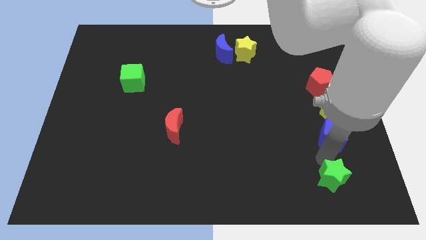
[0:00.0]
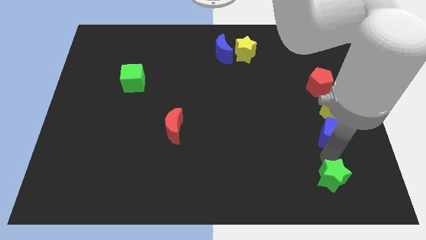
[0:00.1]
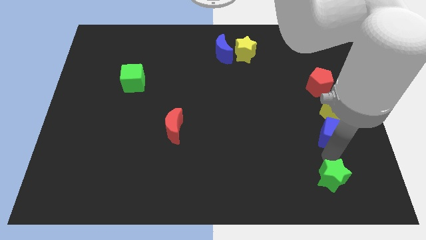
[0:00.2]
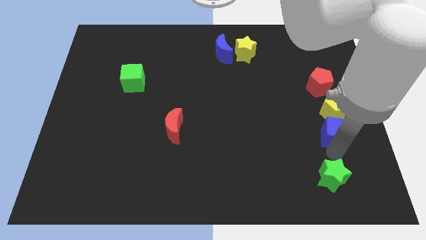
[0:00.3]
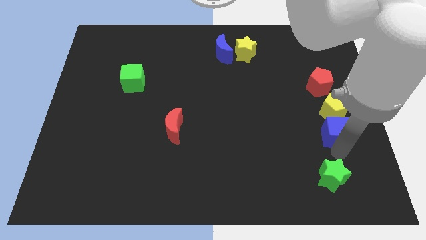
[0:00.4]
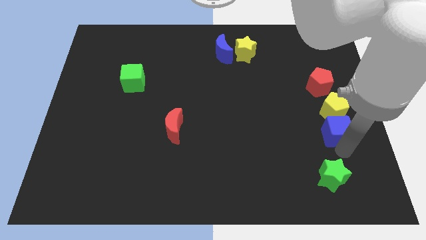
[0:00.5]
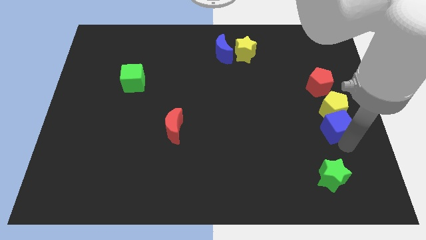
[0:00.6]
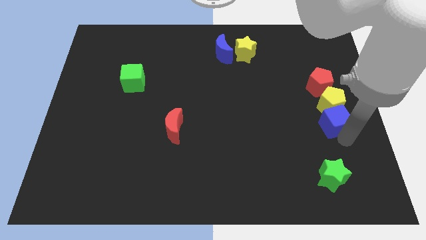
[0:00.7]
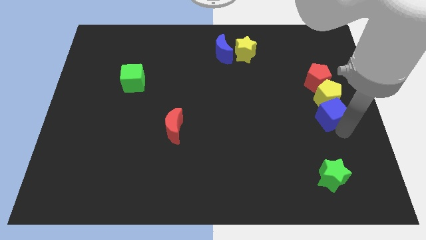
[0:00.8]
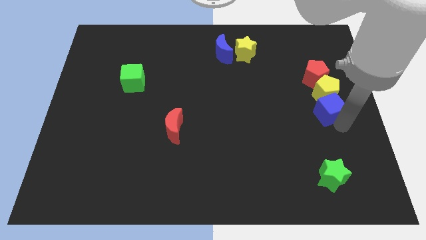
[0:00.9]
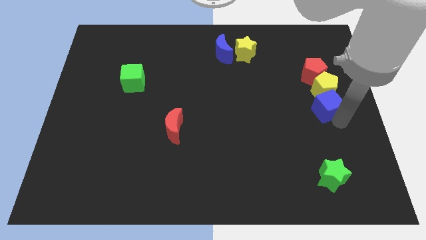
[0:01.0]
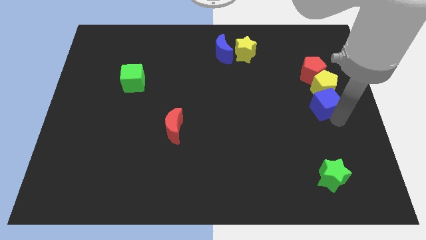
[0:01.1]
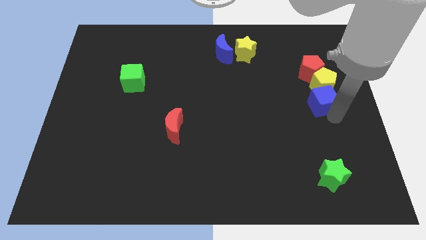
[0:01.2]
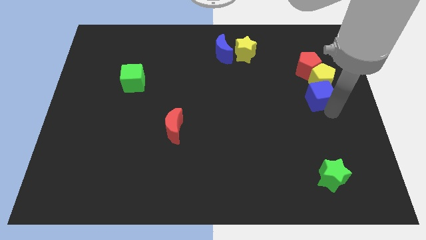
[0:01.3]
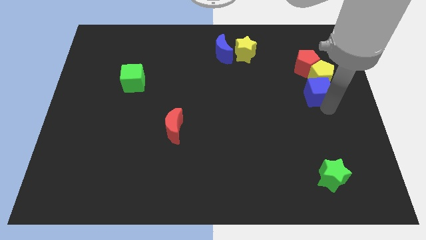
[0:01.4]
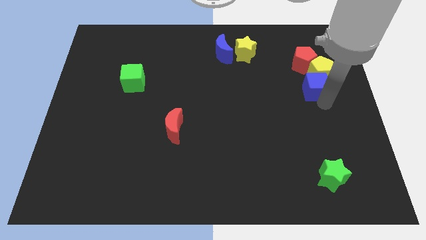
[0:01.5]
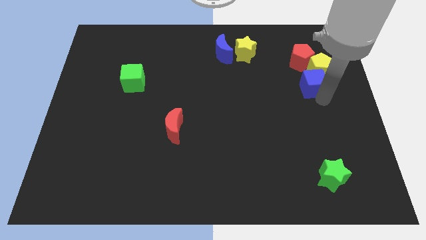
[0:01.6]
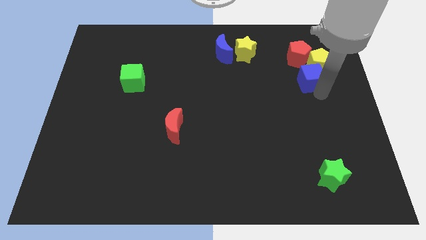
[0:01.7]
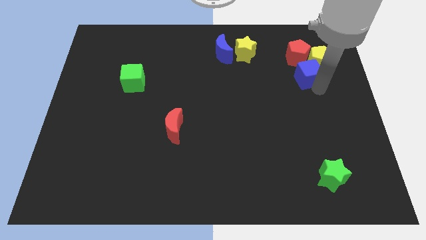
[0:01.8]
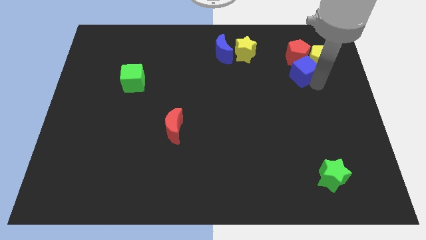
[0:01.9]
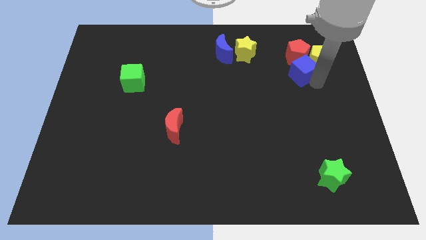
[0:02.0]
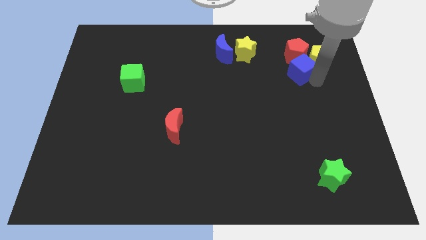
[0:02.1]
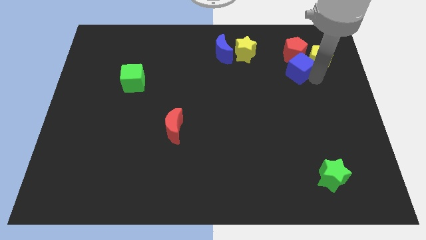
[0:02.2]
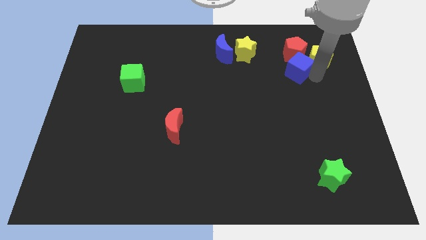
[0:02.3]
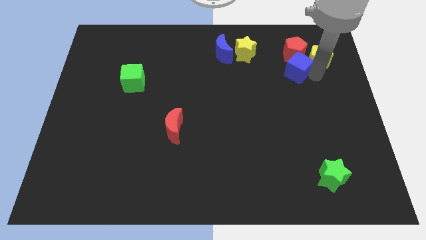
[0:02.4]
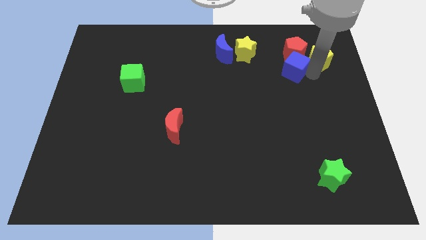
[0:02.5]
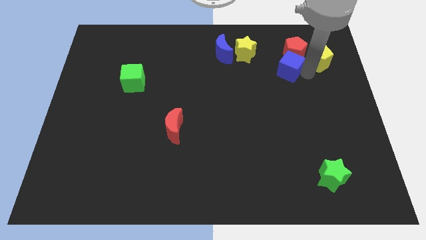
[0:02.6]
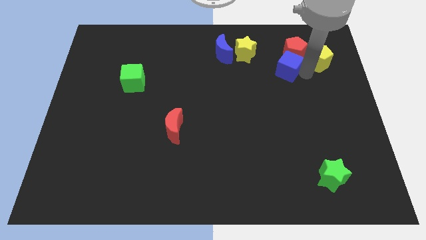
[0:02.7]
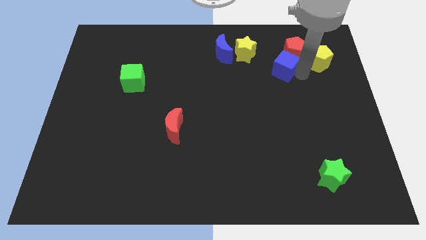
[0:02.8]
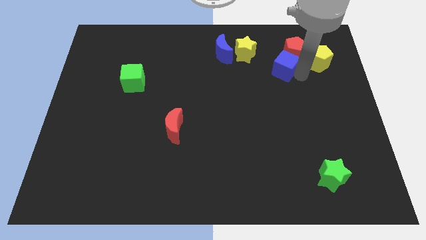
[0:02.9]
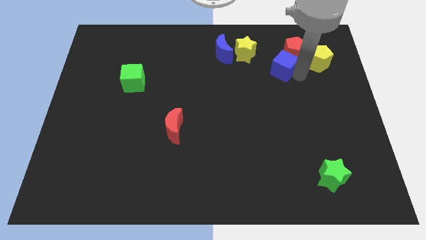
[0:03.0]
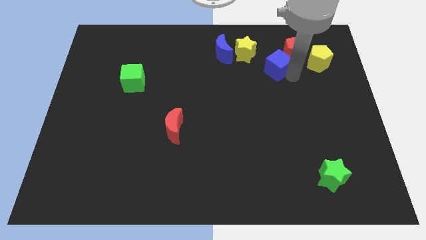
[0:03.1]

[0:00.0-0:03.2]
push the blue cube into the red pentagon and yellow pentagon

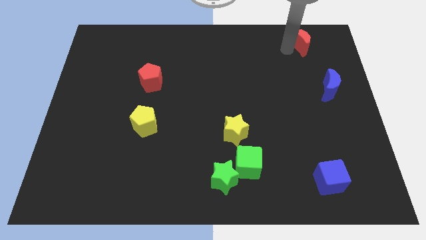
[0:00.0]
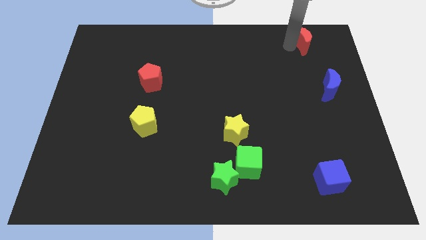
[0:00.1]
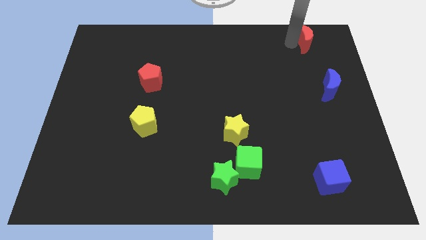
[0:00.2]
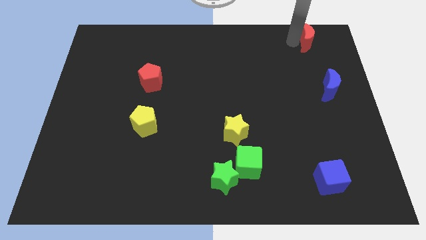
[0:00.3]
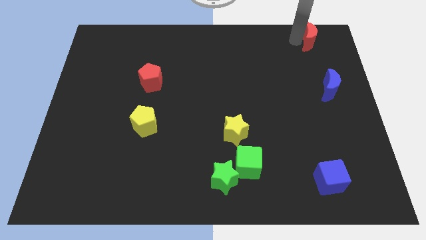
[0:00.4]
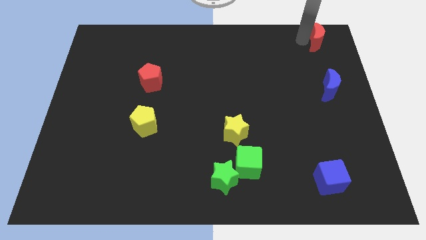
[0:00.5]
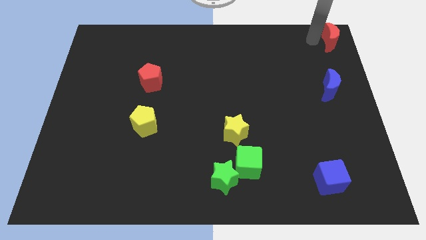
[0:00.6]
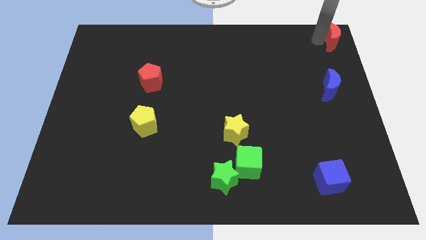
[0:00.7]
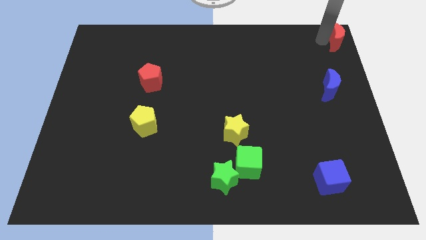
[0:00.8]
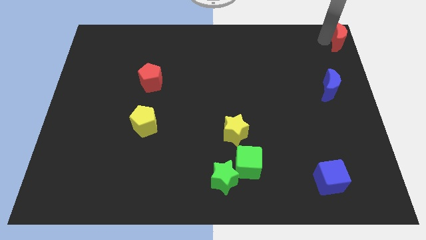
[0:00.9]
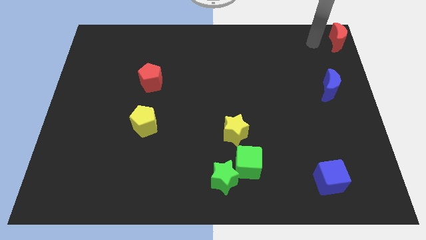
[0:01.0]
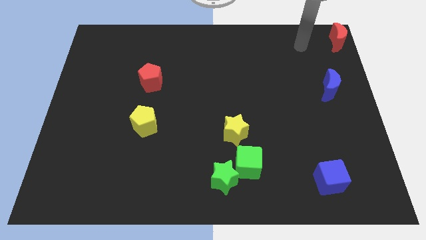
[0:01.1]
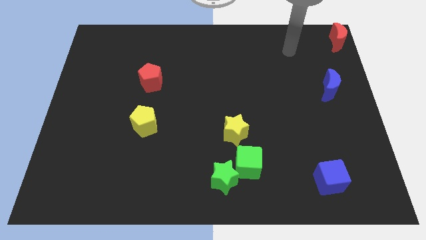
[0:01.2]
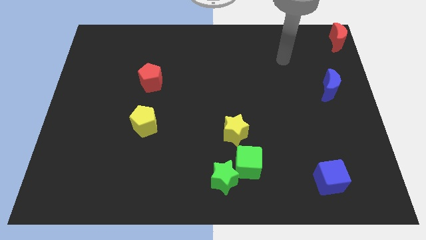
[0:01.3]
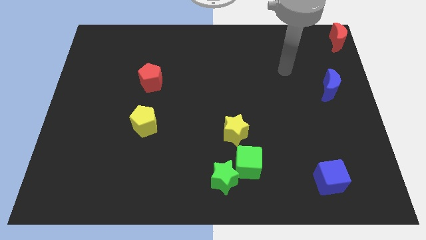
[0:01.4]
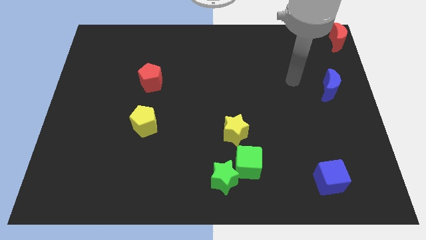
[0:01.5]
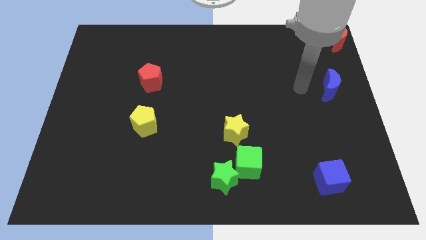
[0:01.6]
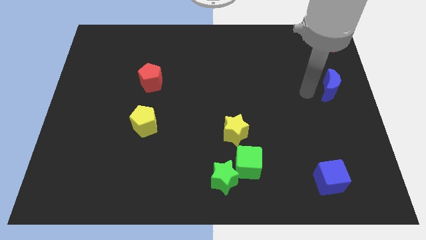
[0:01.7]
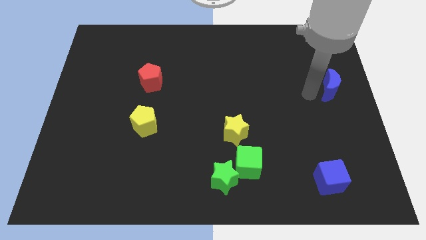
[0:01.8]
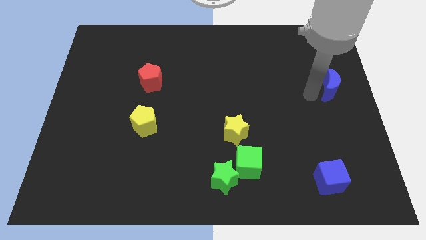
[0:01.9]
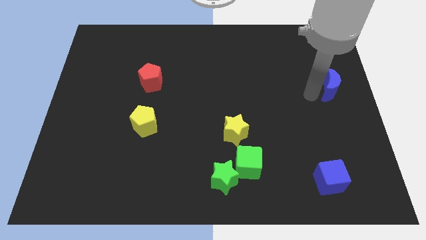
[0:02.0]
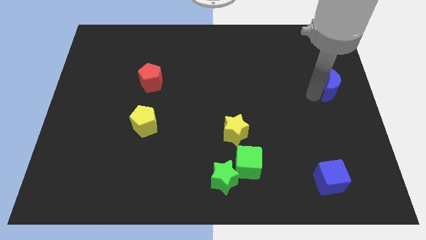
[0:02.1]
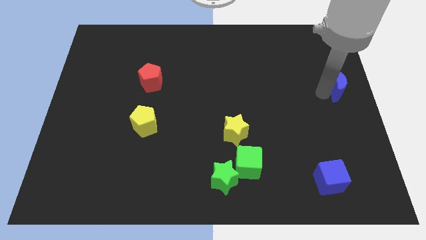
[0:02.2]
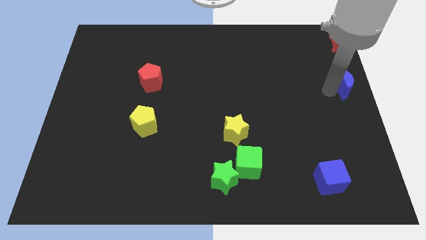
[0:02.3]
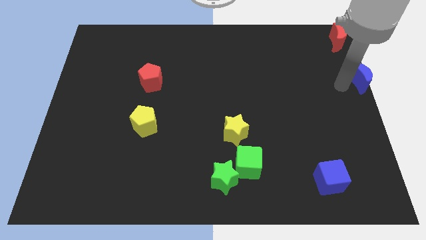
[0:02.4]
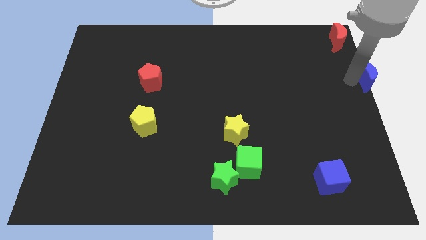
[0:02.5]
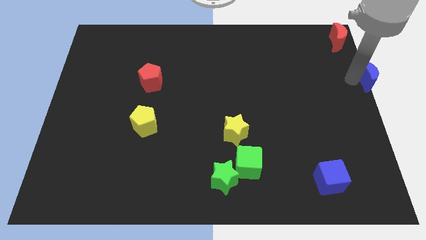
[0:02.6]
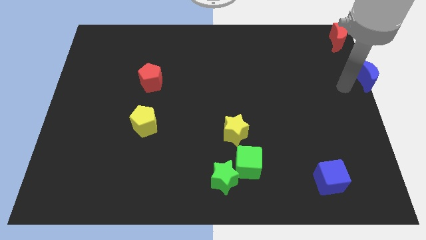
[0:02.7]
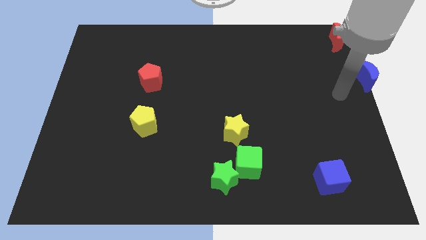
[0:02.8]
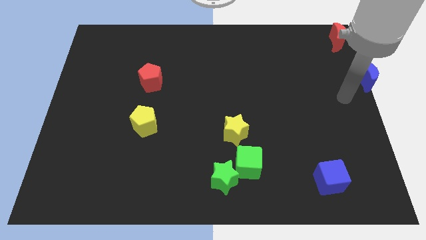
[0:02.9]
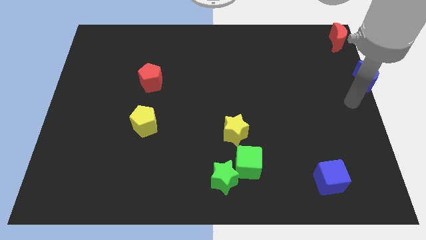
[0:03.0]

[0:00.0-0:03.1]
move red moon towards top right side of the board

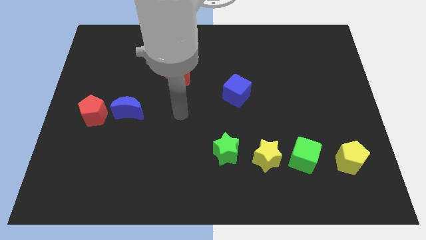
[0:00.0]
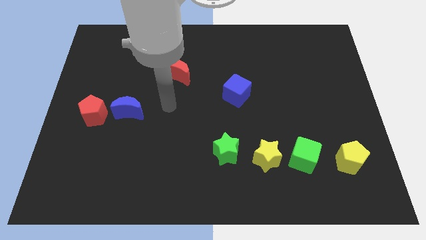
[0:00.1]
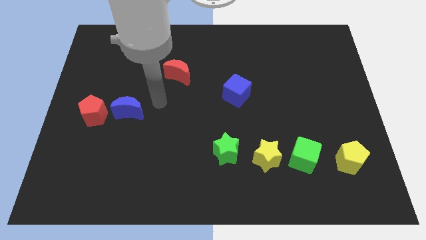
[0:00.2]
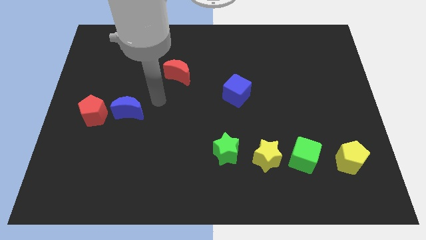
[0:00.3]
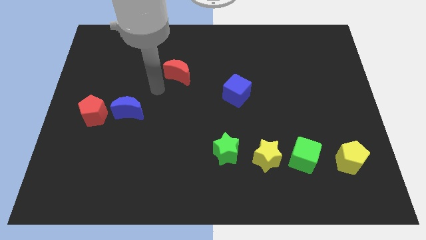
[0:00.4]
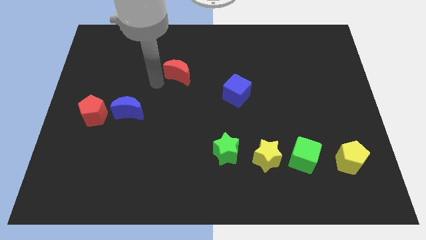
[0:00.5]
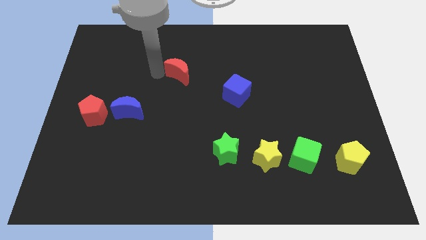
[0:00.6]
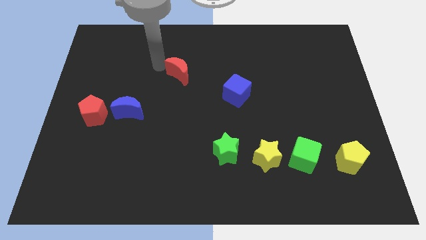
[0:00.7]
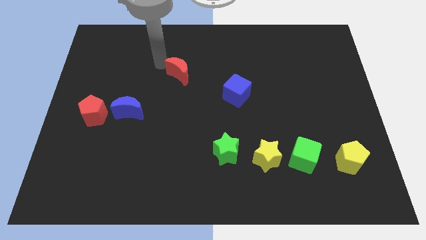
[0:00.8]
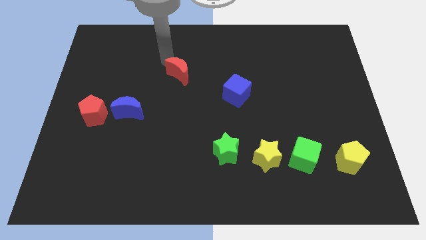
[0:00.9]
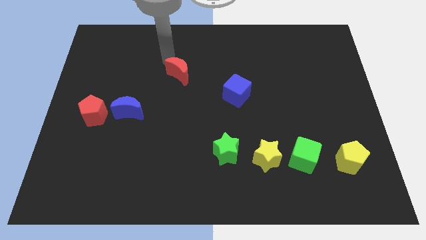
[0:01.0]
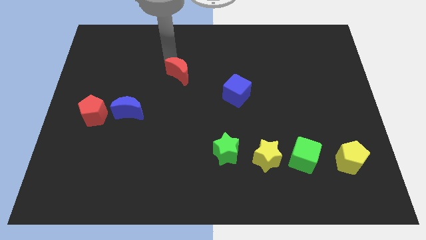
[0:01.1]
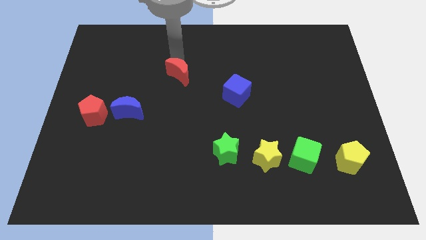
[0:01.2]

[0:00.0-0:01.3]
move the arm above to the red moon

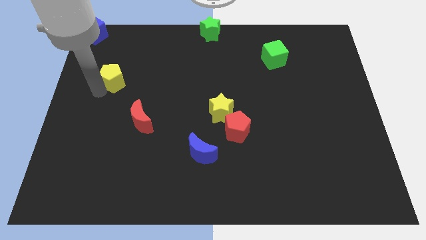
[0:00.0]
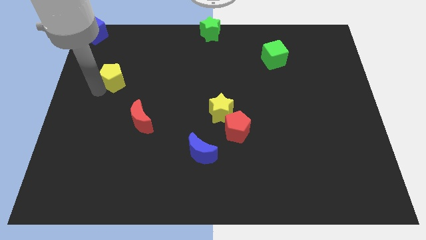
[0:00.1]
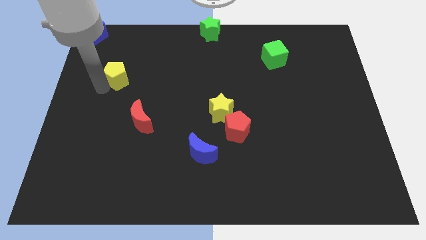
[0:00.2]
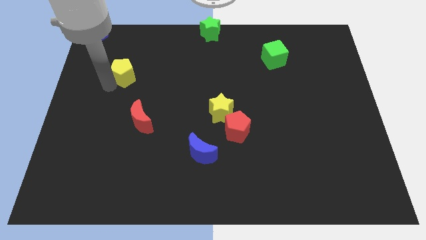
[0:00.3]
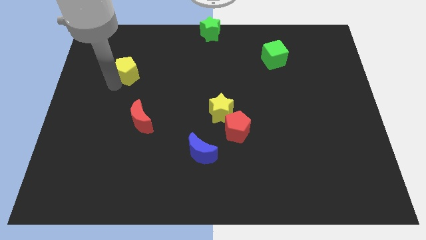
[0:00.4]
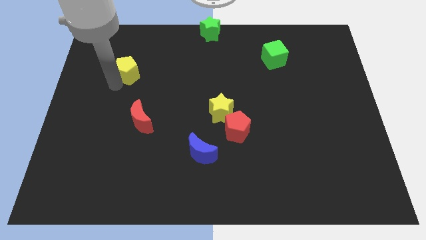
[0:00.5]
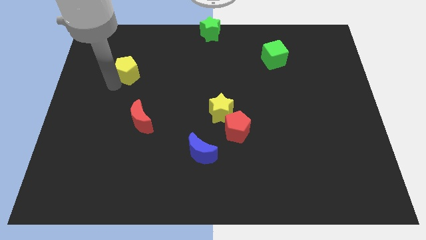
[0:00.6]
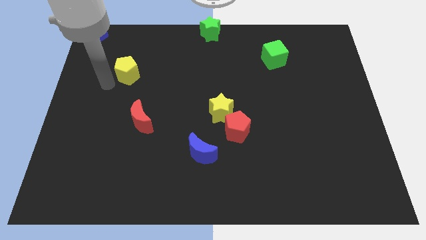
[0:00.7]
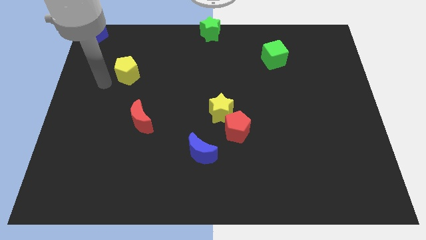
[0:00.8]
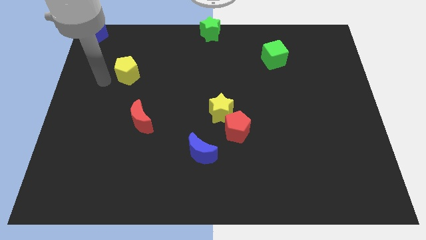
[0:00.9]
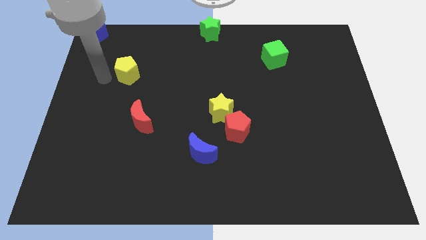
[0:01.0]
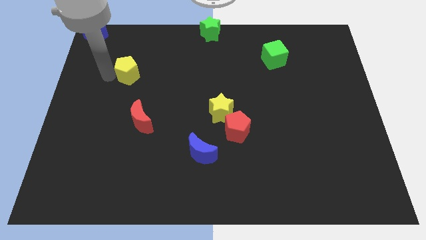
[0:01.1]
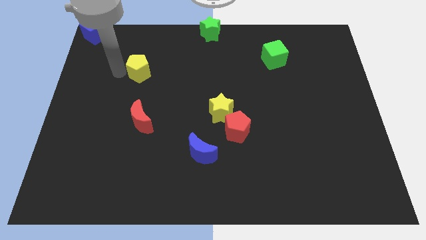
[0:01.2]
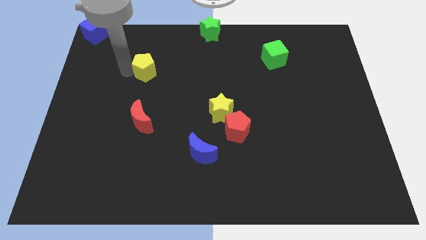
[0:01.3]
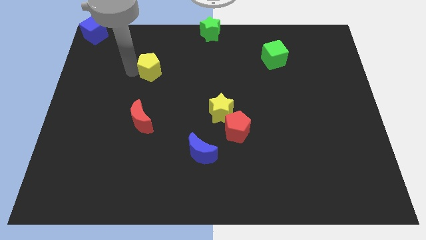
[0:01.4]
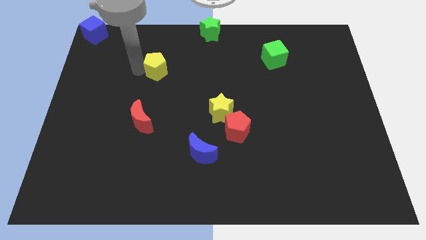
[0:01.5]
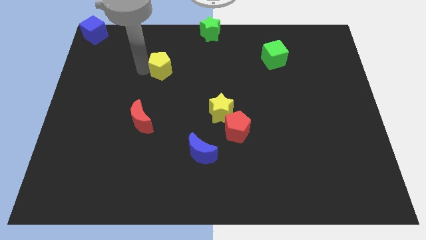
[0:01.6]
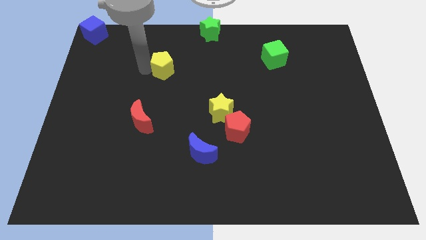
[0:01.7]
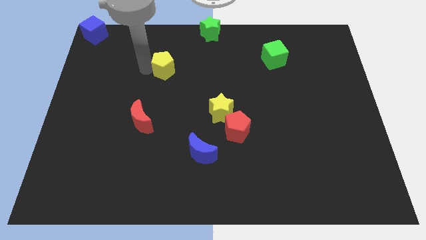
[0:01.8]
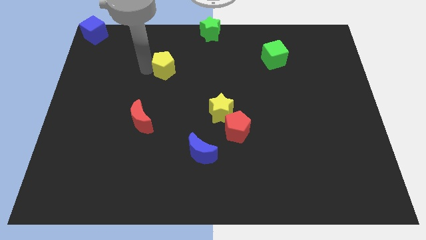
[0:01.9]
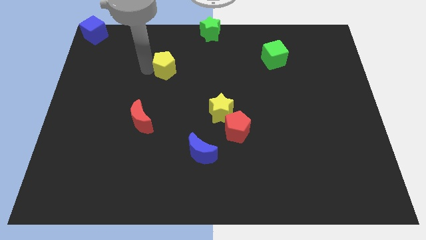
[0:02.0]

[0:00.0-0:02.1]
place the yellow pentagon diagonally towards yellow star
